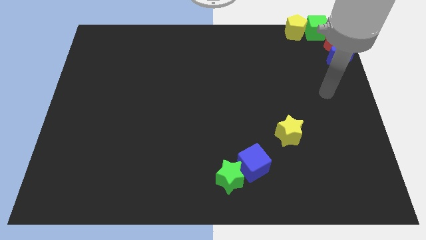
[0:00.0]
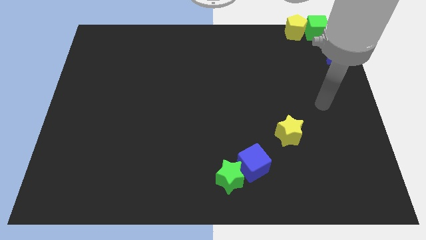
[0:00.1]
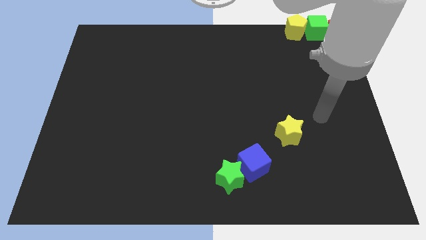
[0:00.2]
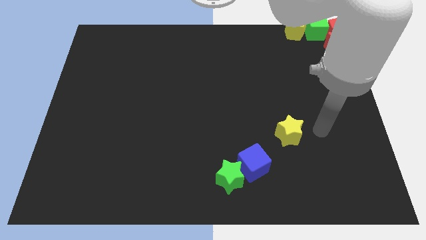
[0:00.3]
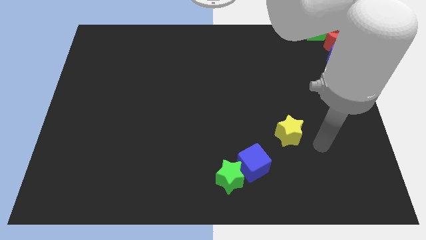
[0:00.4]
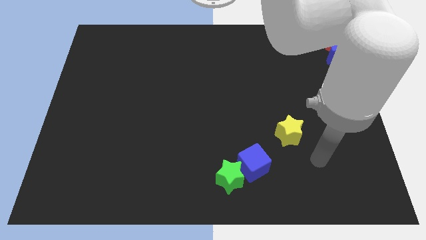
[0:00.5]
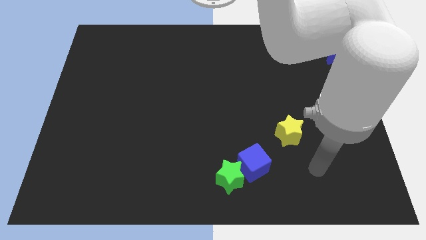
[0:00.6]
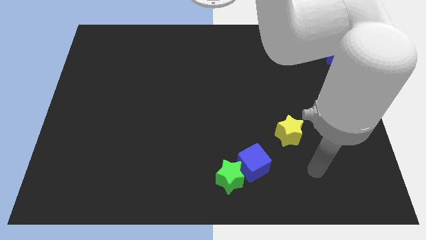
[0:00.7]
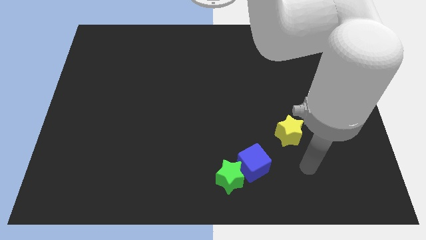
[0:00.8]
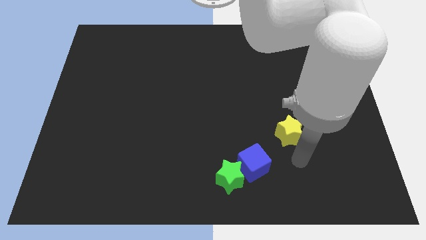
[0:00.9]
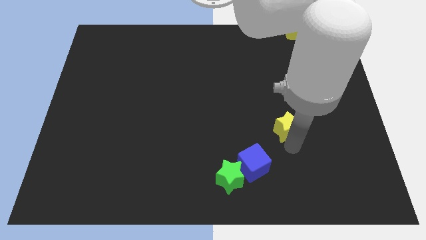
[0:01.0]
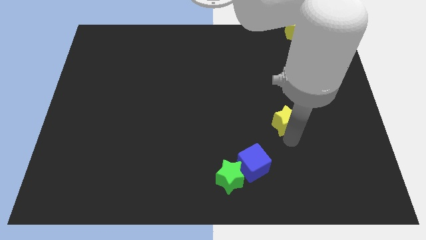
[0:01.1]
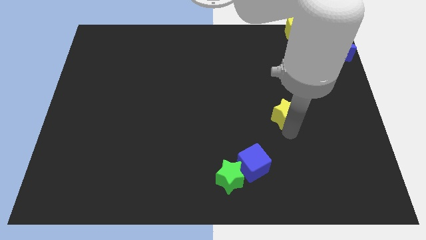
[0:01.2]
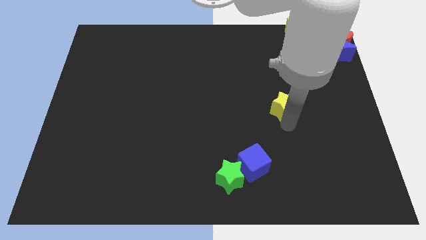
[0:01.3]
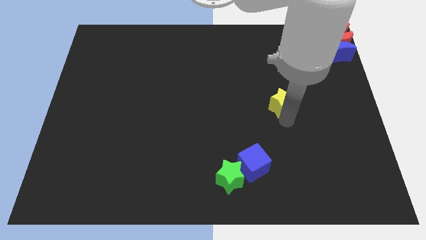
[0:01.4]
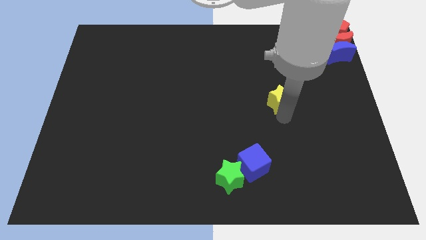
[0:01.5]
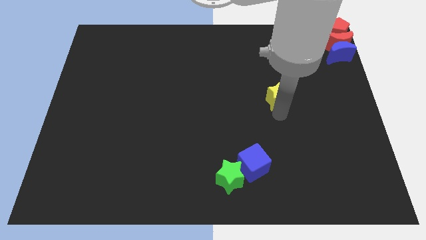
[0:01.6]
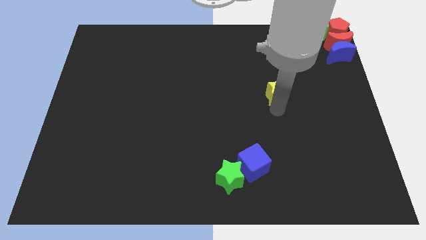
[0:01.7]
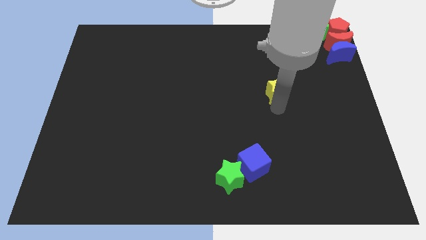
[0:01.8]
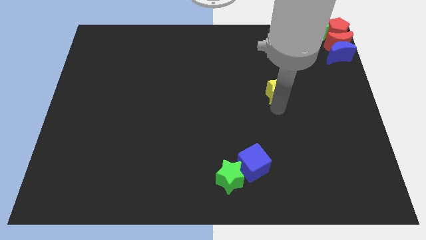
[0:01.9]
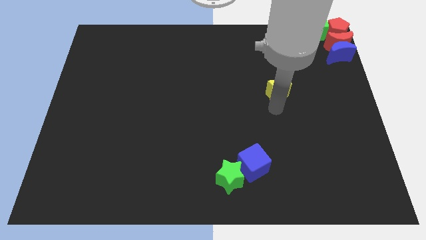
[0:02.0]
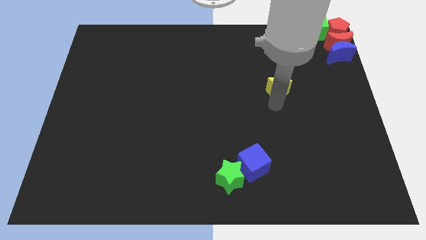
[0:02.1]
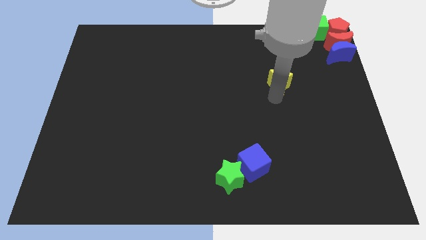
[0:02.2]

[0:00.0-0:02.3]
push the yellow star towards the top side

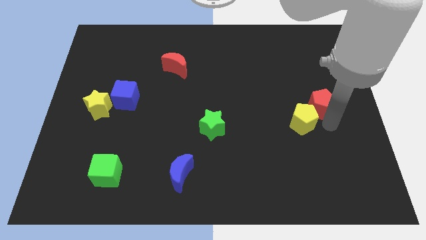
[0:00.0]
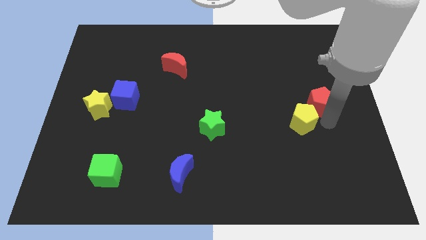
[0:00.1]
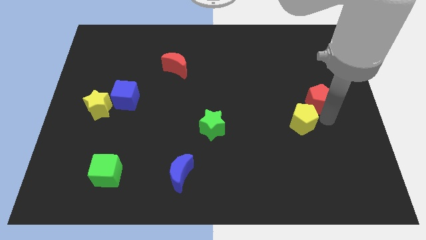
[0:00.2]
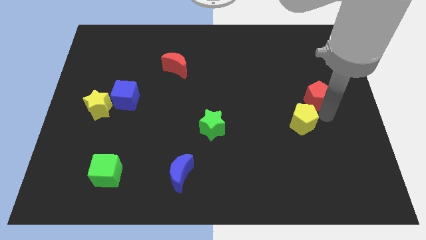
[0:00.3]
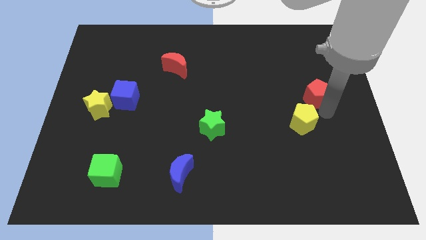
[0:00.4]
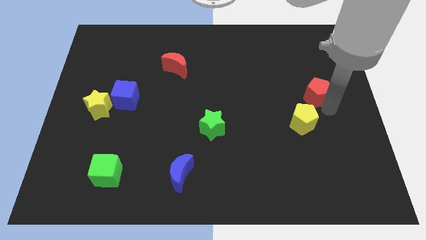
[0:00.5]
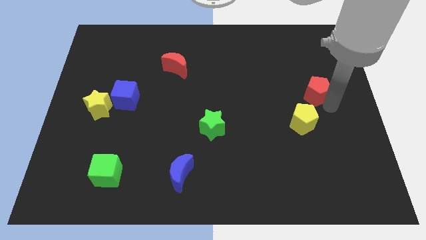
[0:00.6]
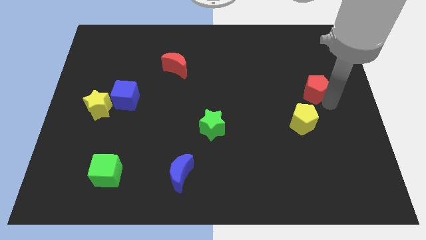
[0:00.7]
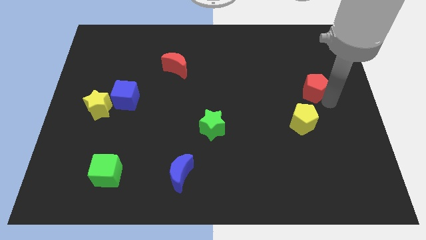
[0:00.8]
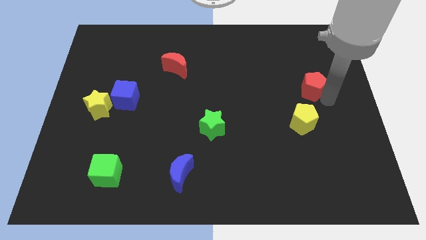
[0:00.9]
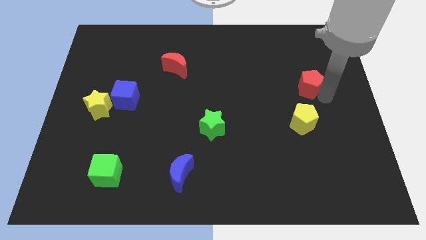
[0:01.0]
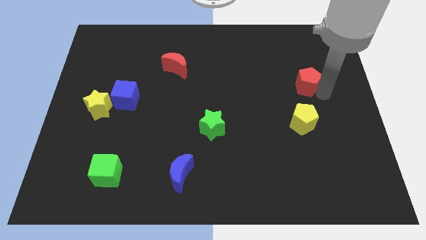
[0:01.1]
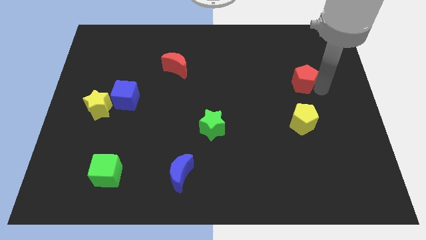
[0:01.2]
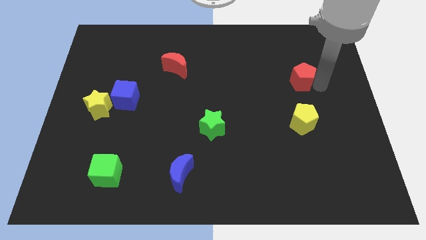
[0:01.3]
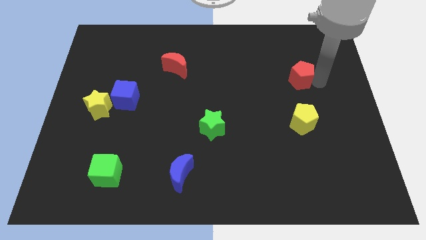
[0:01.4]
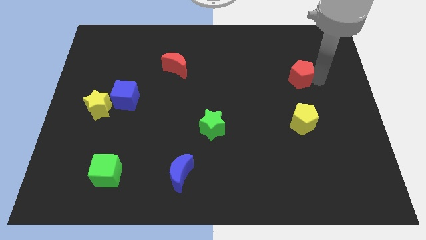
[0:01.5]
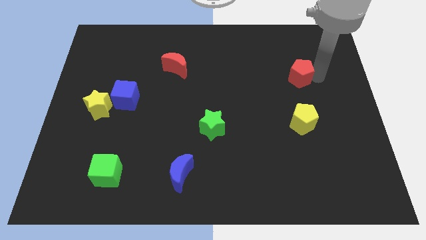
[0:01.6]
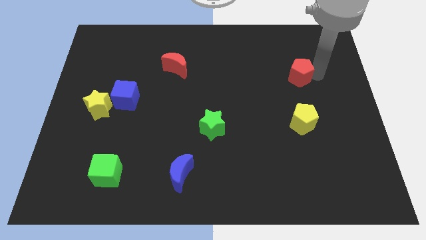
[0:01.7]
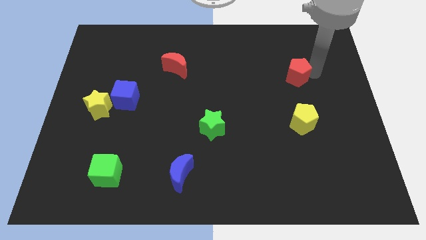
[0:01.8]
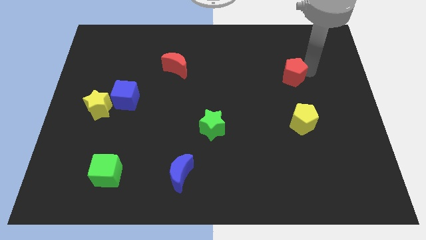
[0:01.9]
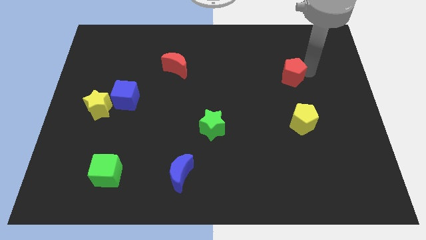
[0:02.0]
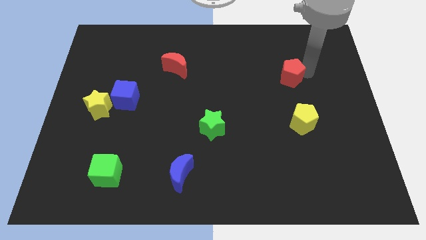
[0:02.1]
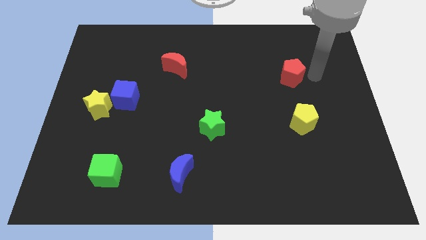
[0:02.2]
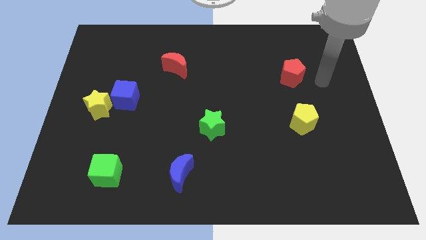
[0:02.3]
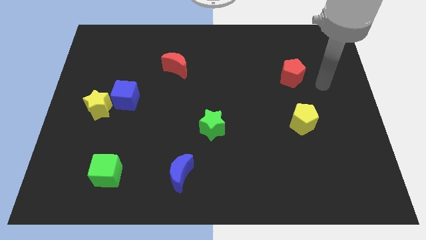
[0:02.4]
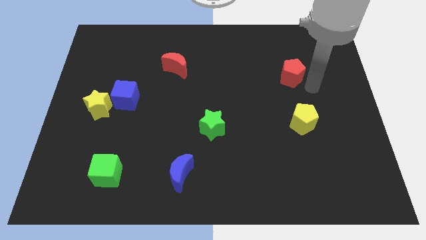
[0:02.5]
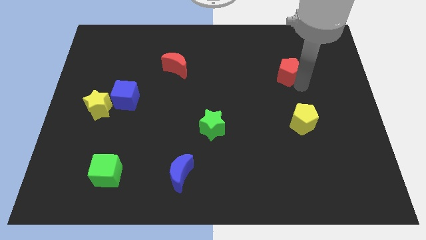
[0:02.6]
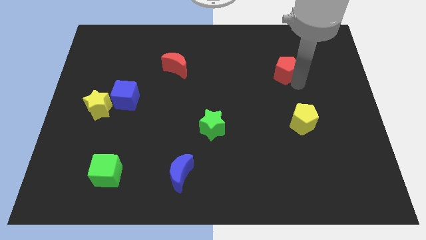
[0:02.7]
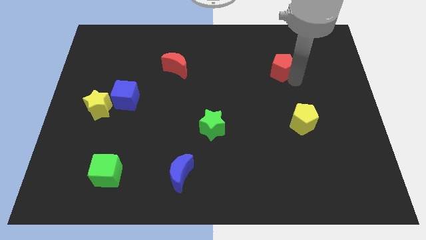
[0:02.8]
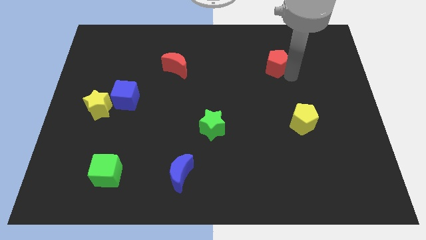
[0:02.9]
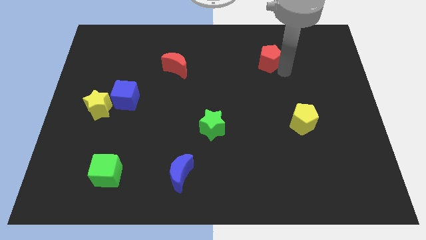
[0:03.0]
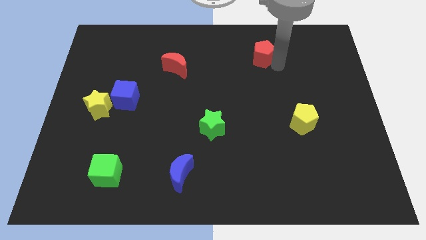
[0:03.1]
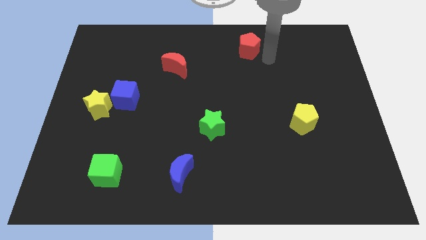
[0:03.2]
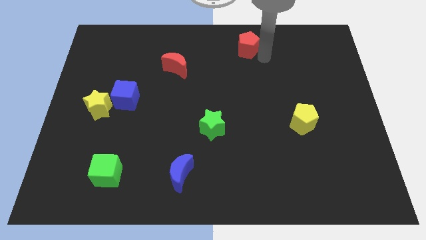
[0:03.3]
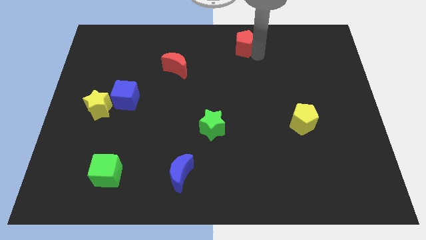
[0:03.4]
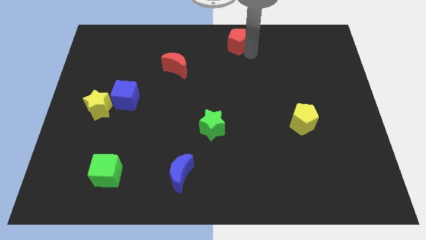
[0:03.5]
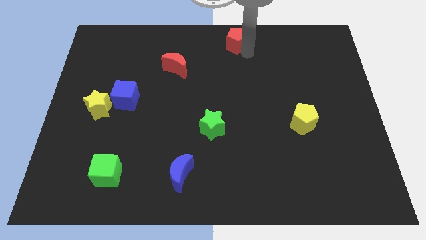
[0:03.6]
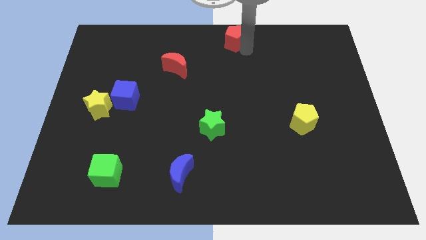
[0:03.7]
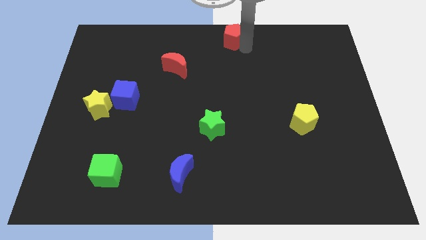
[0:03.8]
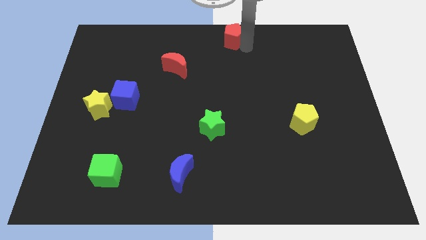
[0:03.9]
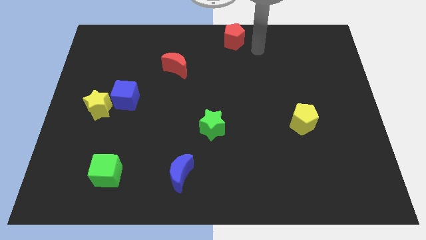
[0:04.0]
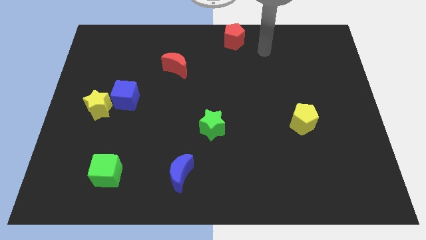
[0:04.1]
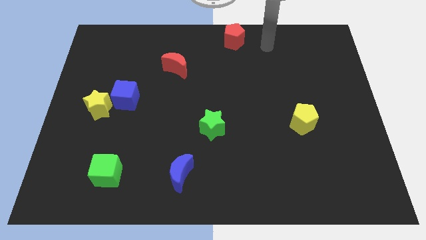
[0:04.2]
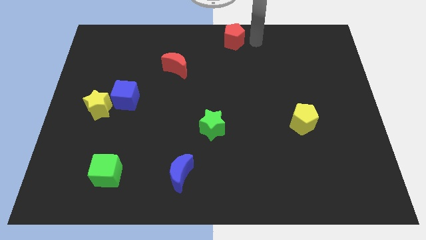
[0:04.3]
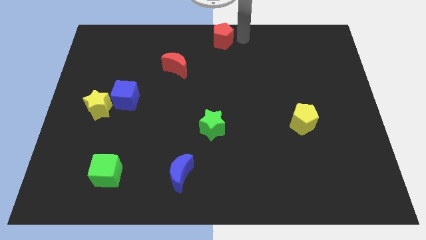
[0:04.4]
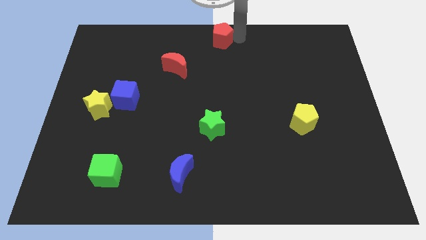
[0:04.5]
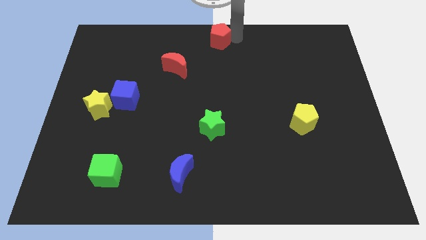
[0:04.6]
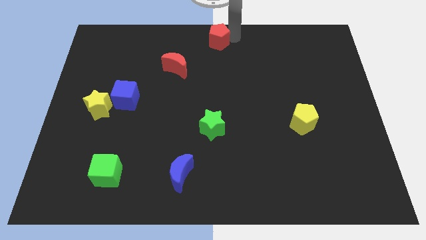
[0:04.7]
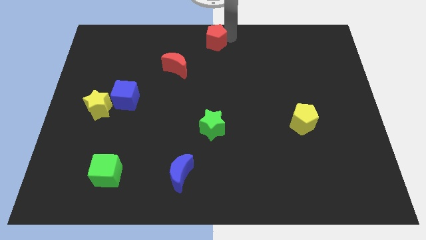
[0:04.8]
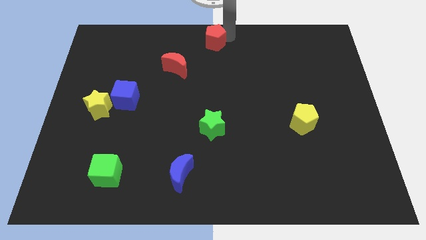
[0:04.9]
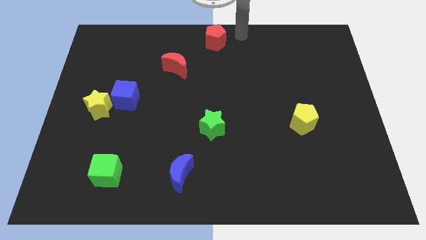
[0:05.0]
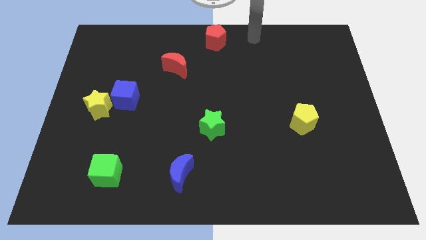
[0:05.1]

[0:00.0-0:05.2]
place the red pentagon at the top center of the board

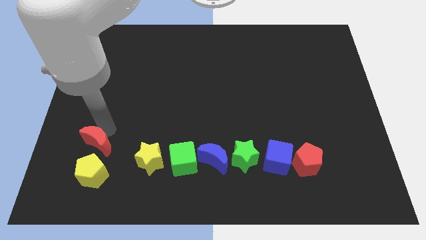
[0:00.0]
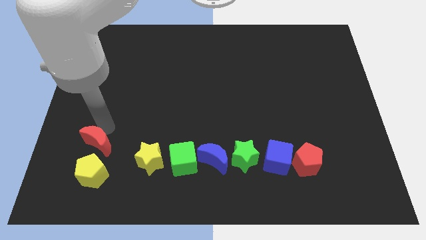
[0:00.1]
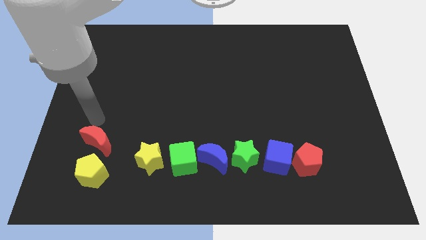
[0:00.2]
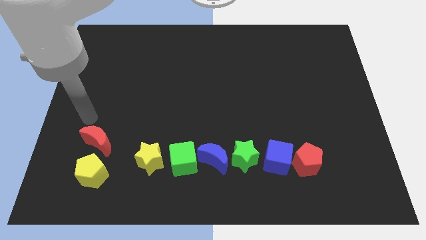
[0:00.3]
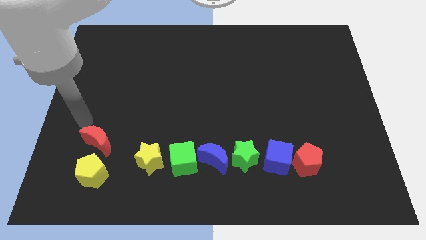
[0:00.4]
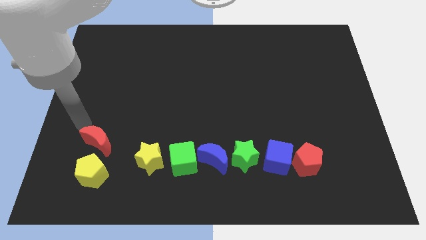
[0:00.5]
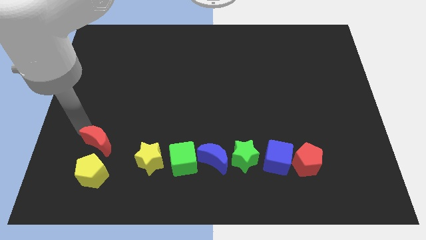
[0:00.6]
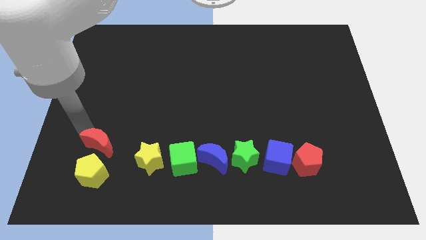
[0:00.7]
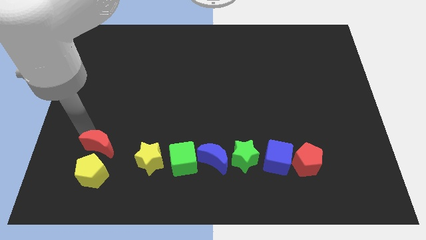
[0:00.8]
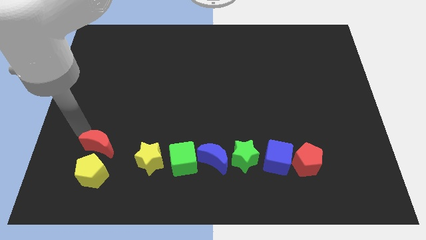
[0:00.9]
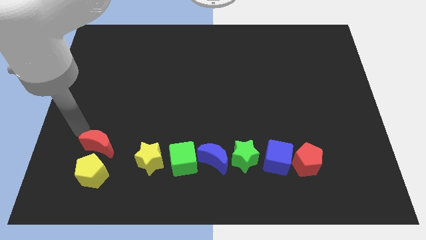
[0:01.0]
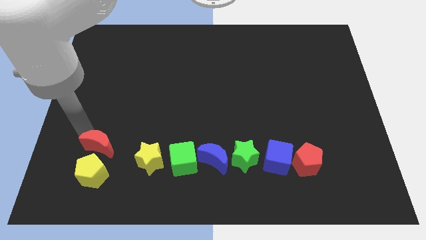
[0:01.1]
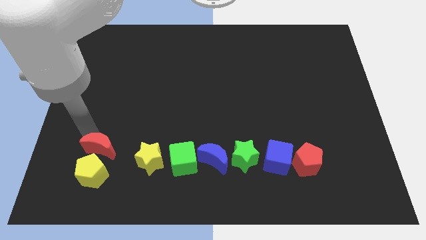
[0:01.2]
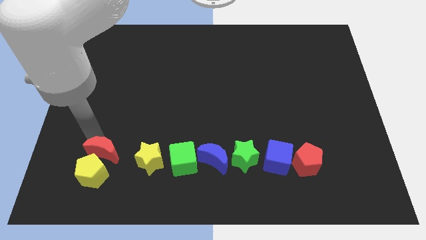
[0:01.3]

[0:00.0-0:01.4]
move the red crescent towards the yellow pentagon
